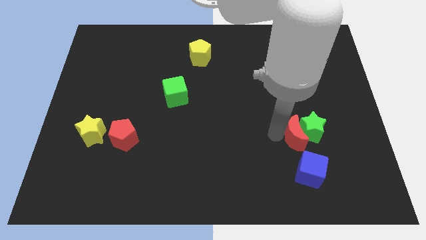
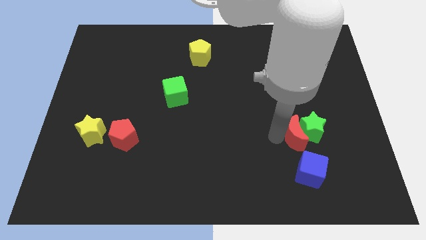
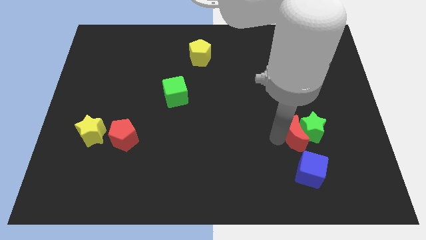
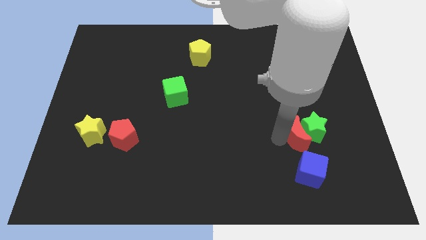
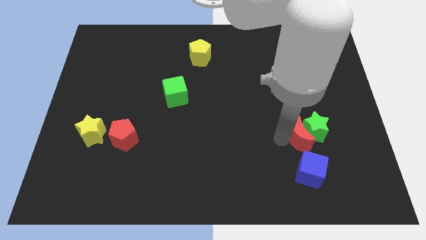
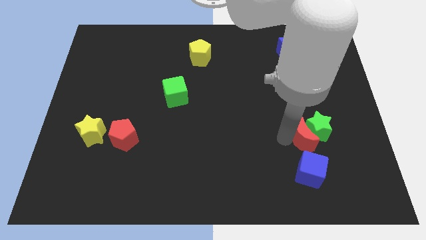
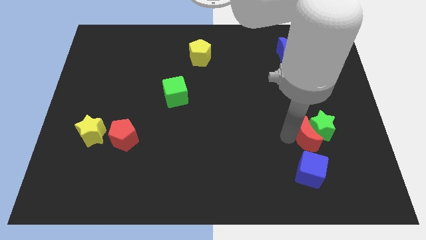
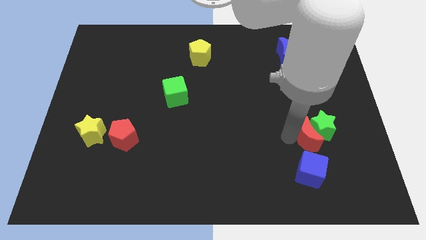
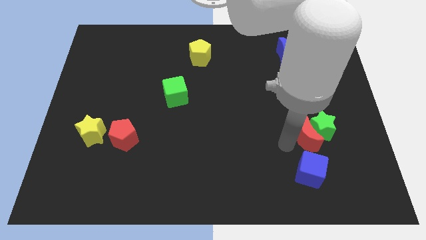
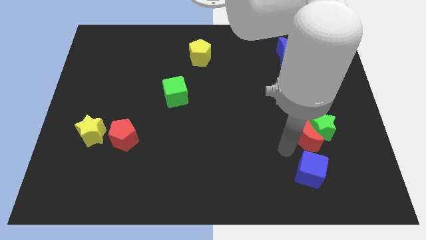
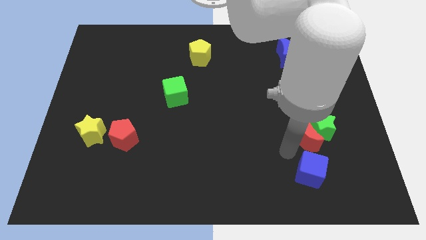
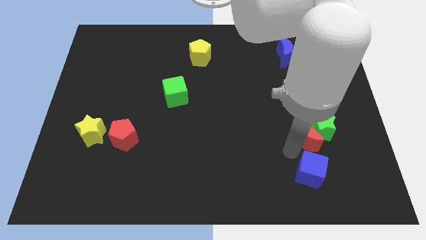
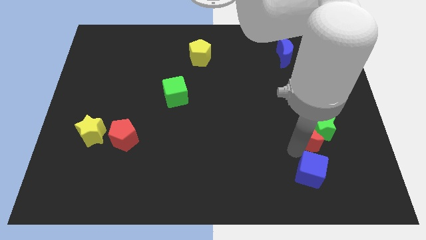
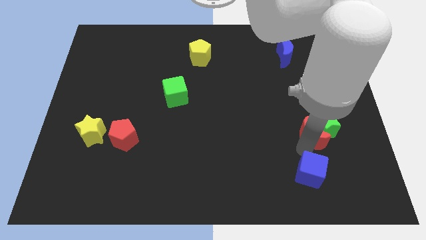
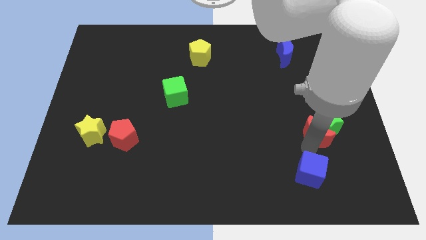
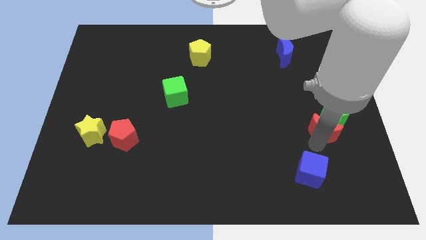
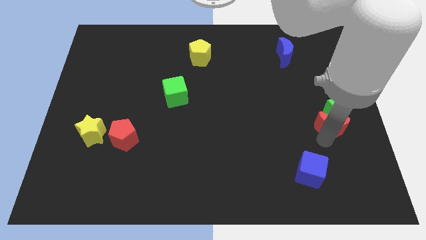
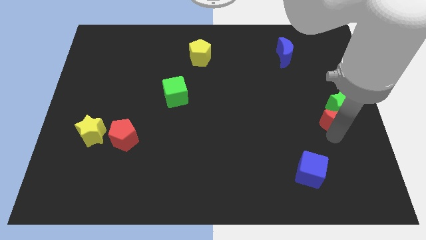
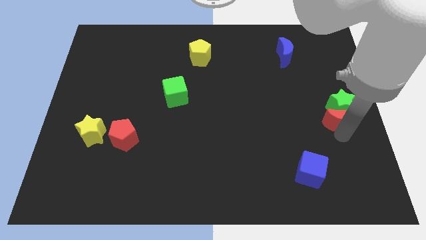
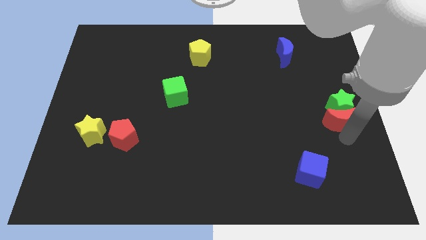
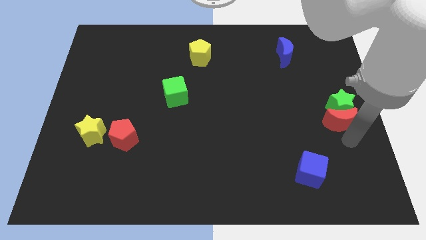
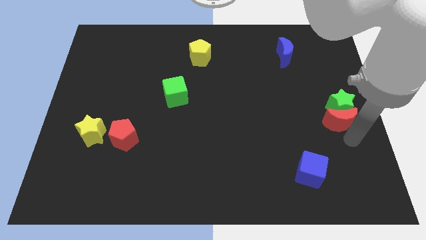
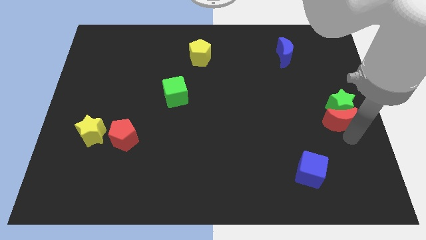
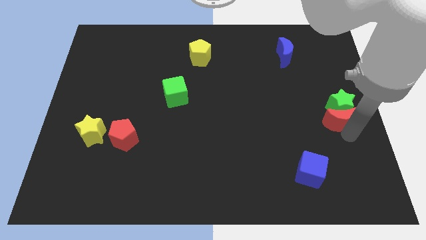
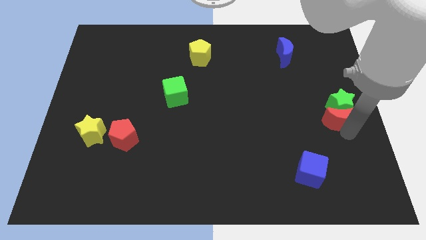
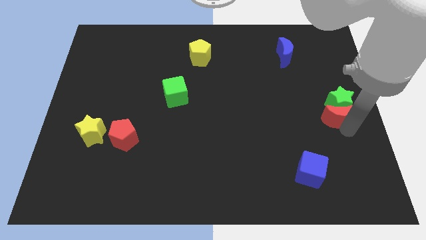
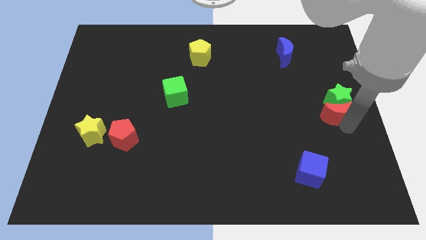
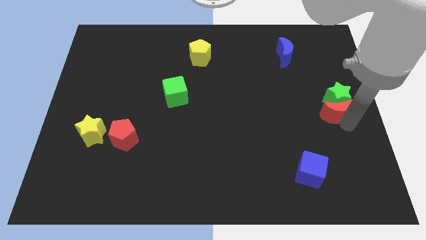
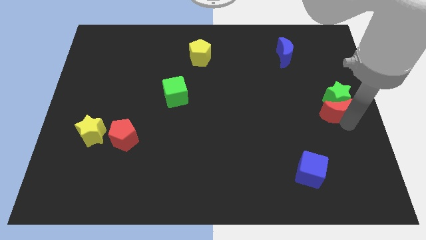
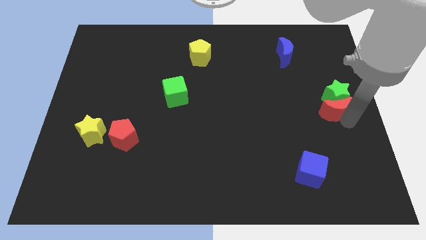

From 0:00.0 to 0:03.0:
place the green star and red crescent at the center right of the board

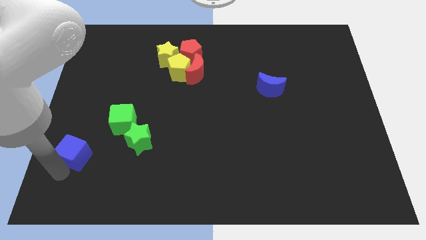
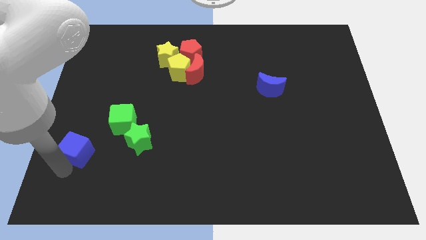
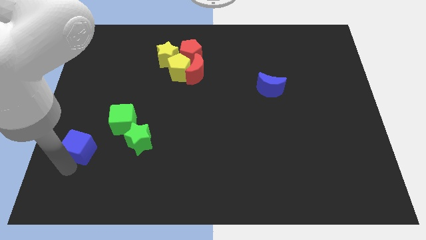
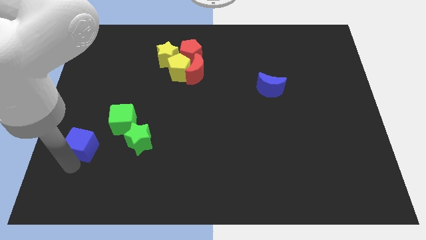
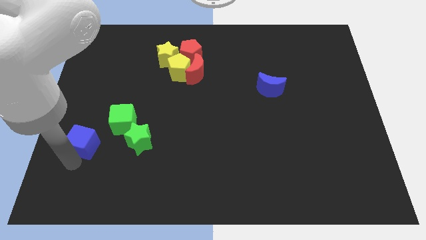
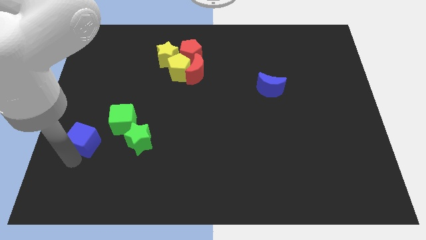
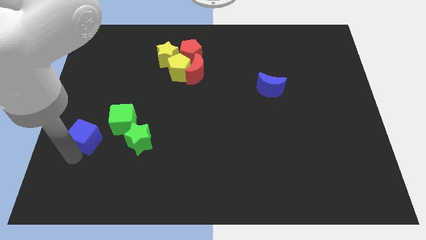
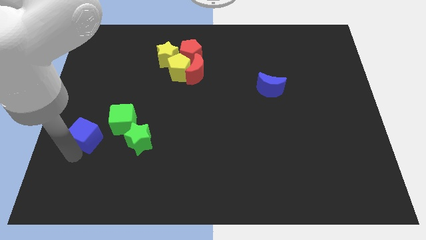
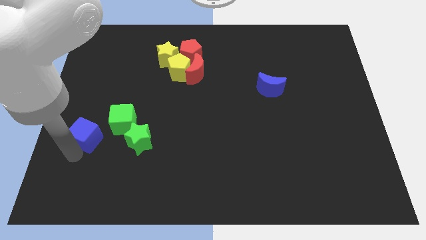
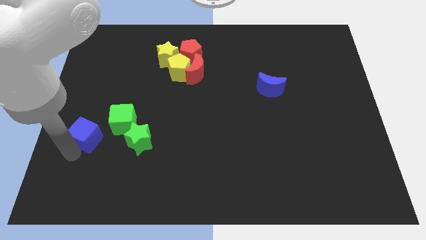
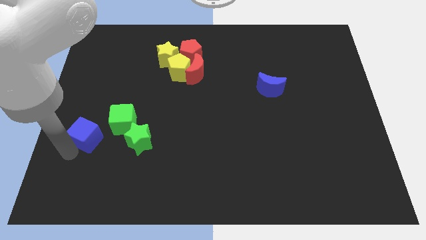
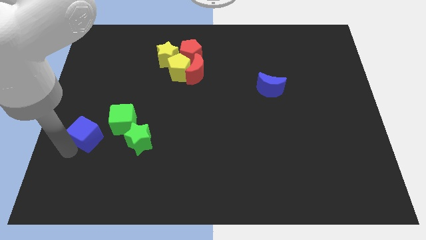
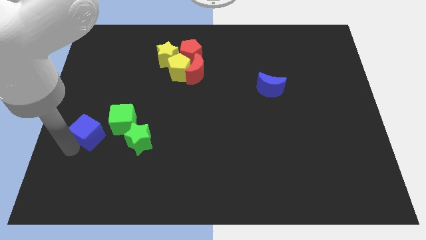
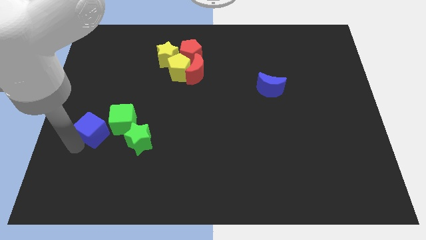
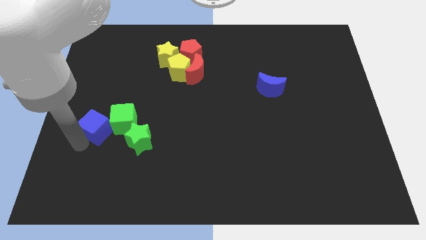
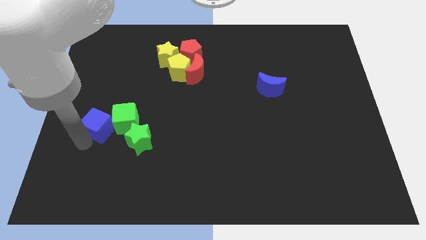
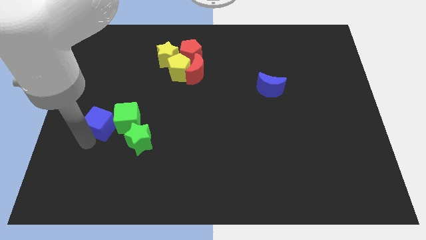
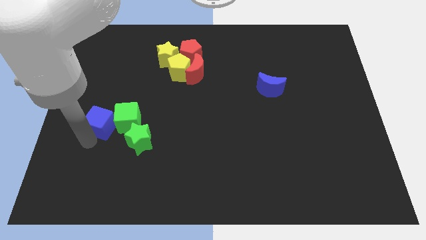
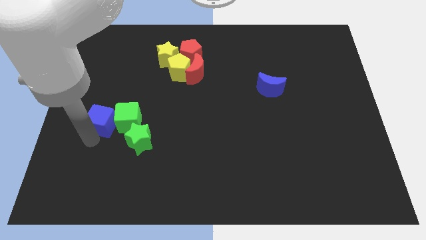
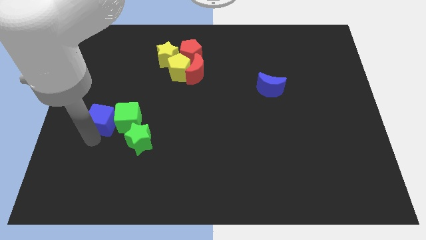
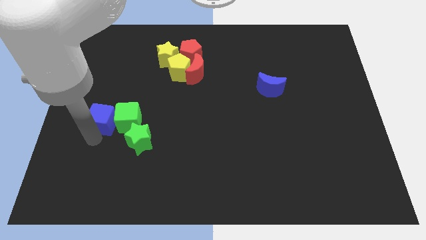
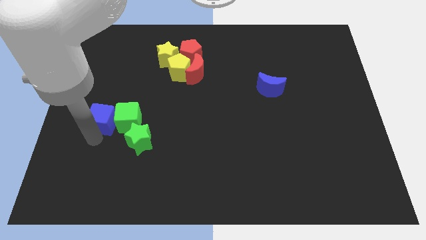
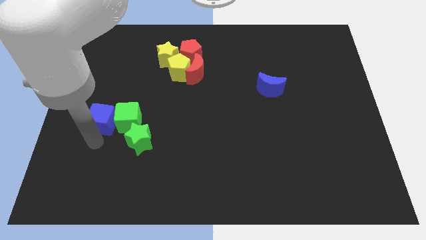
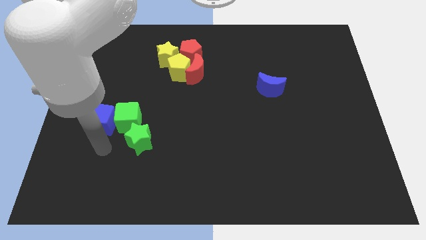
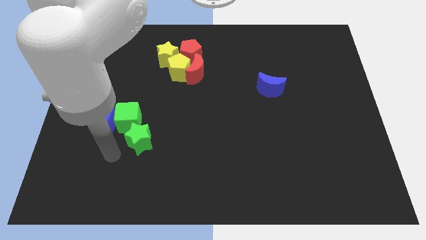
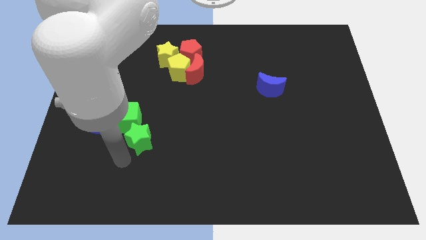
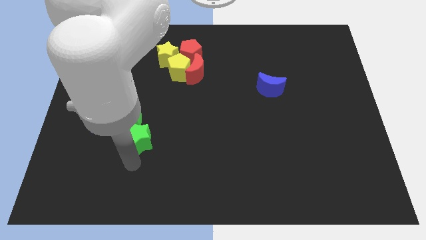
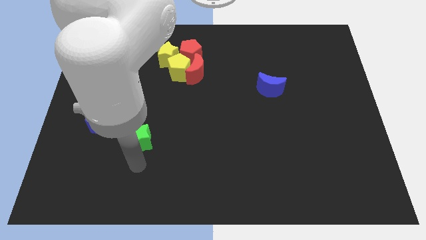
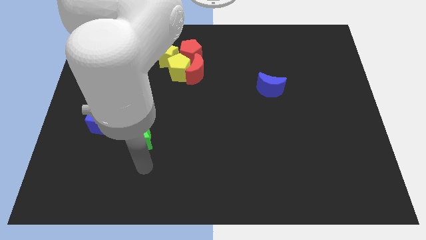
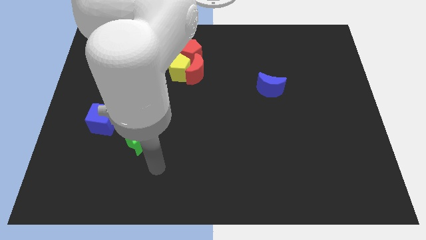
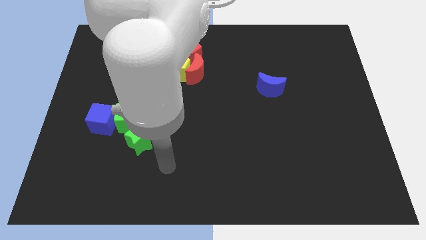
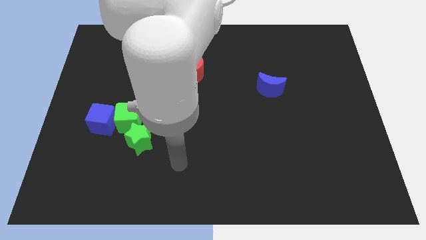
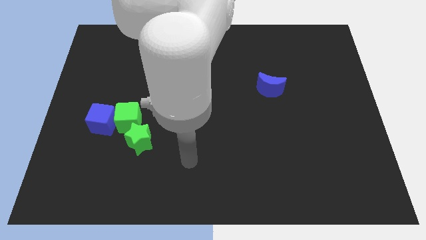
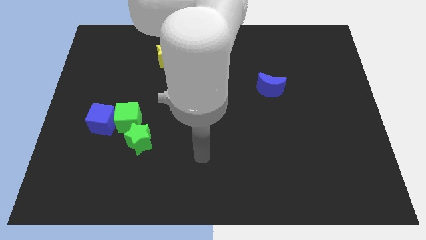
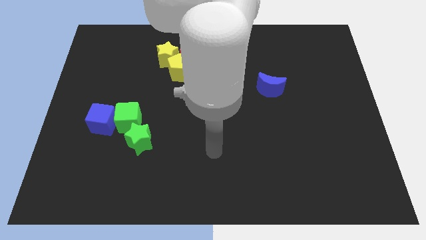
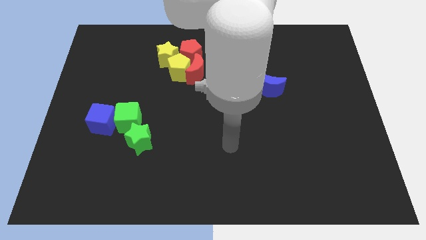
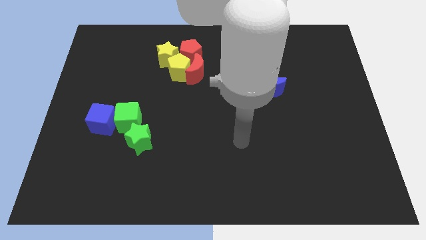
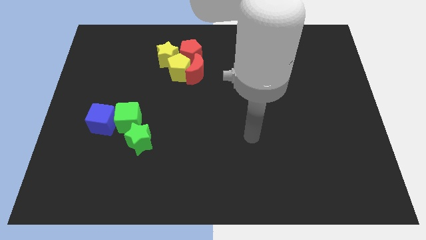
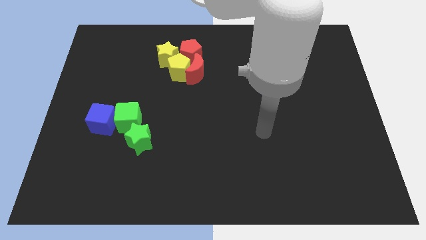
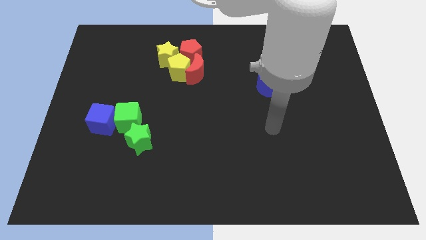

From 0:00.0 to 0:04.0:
push the blue cube left to the green cube

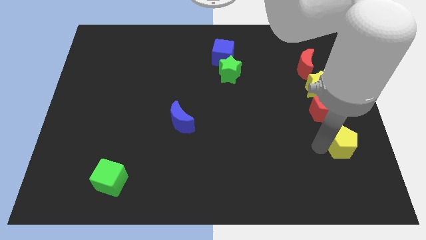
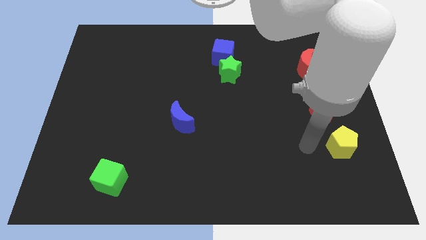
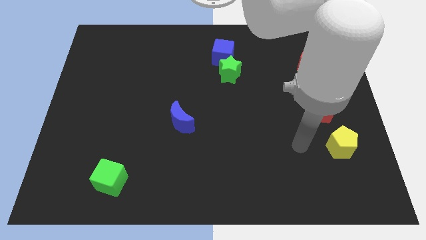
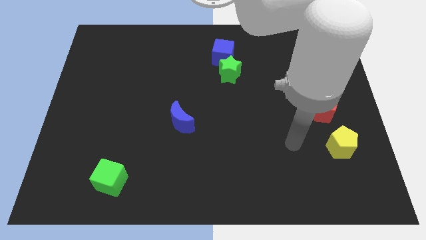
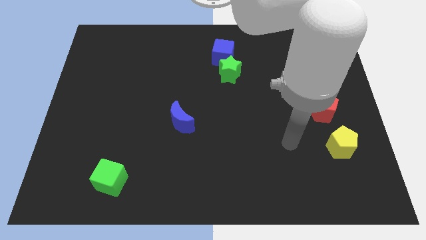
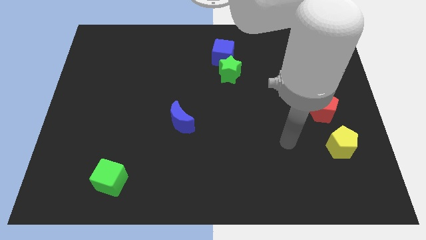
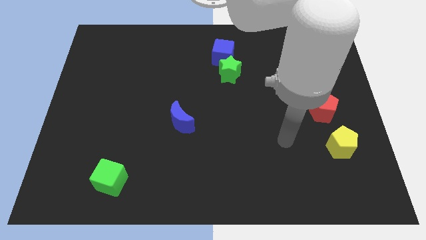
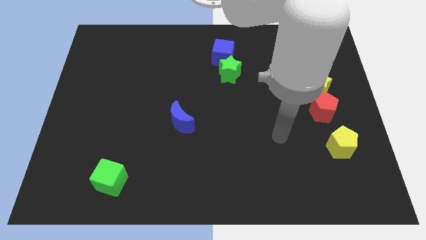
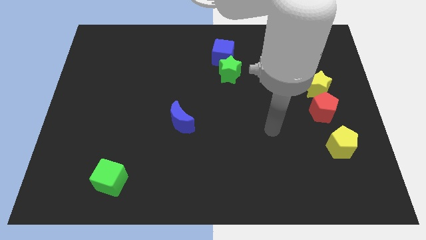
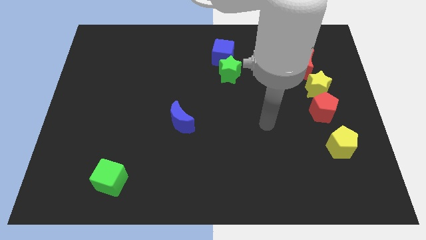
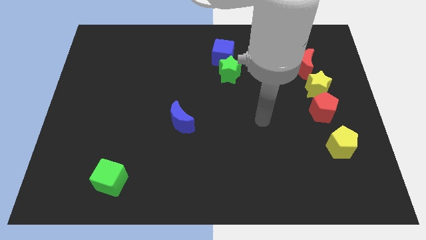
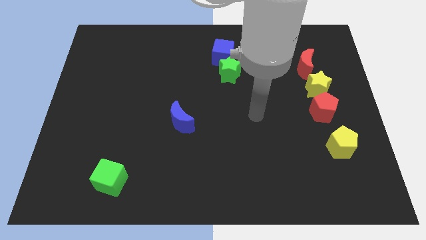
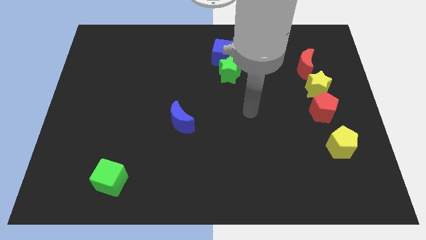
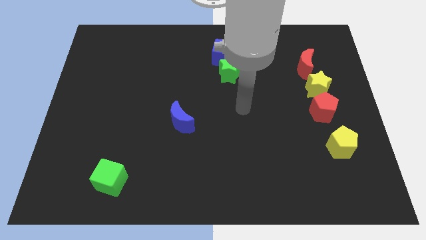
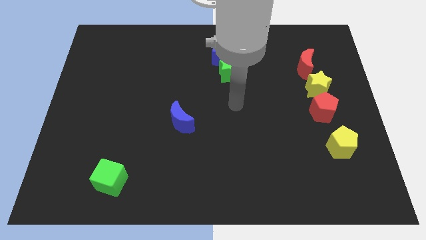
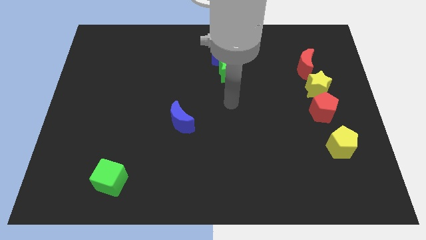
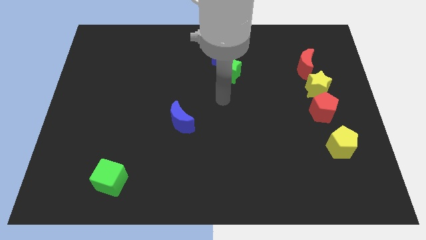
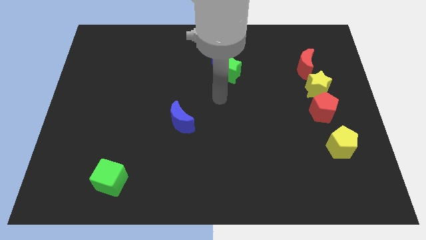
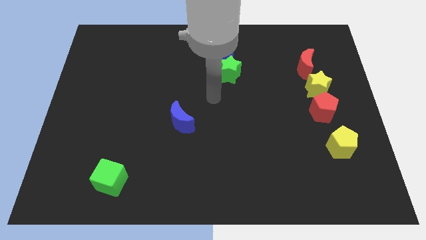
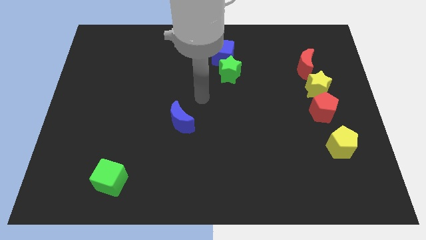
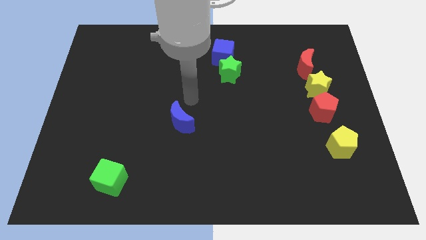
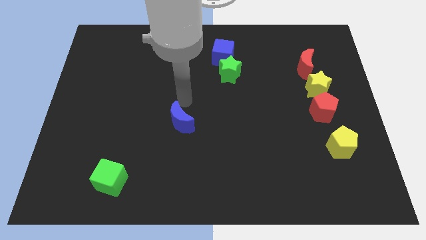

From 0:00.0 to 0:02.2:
move away from the yellow pentagon
